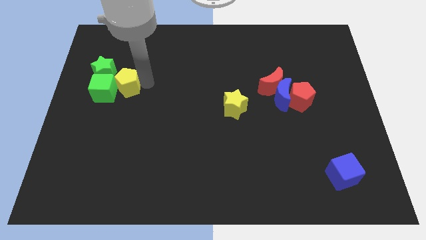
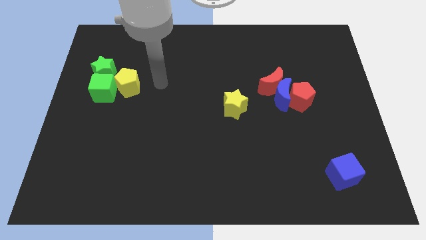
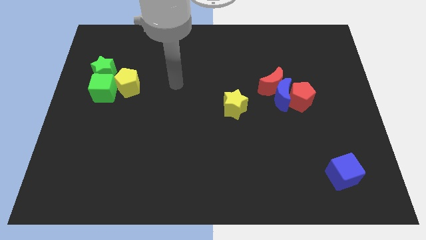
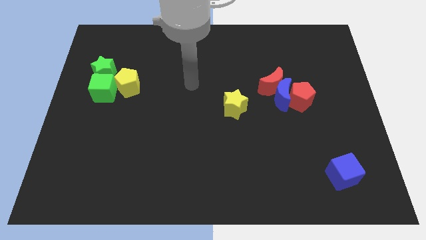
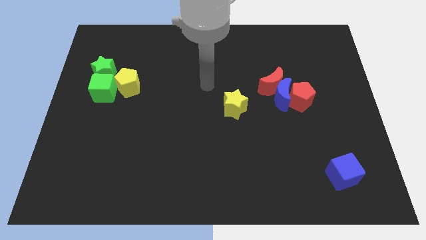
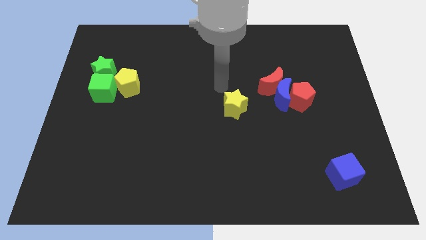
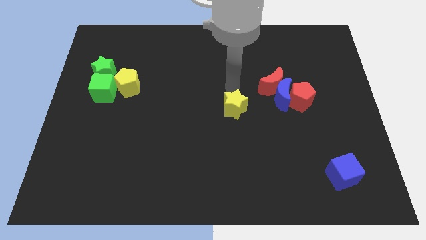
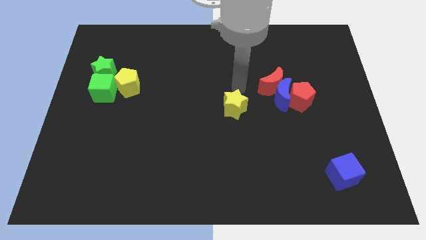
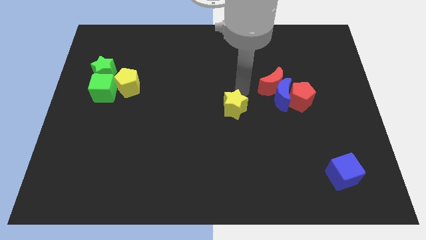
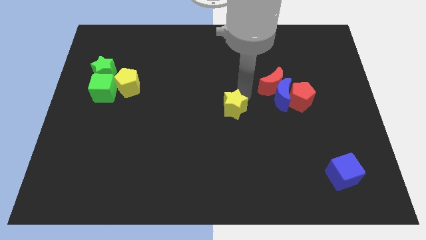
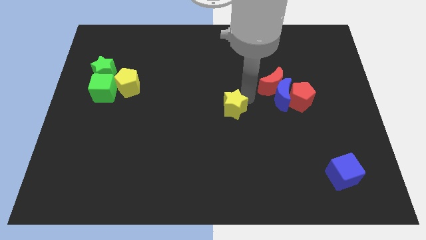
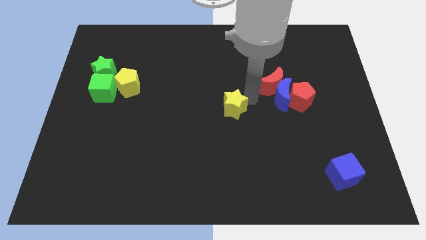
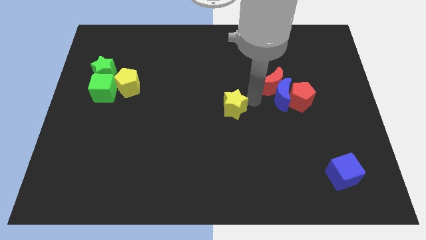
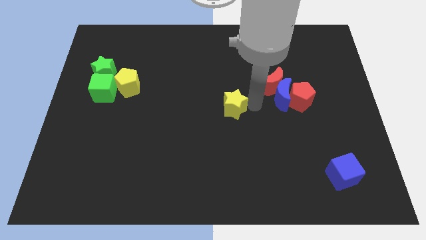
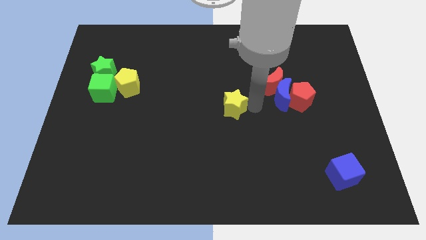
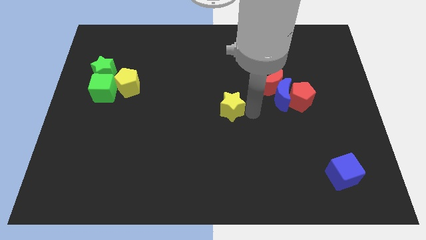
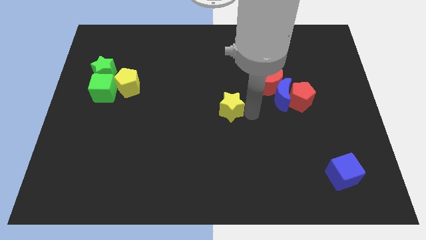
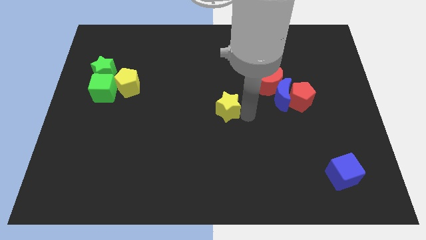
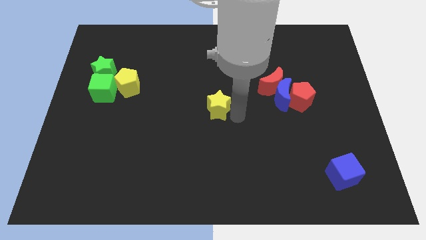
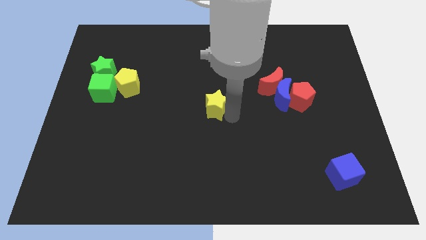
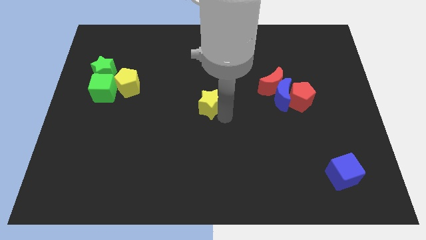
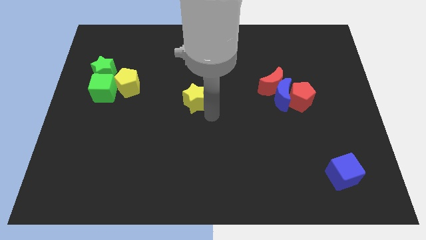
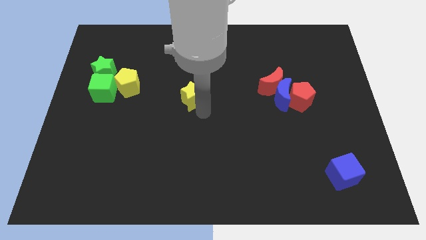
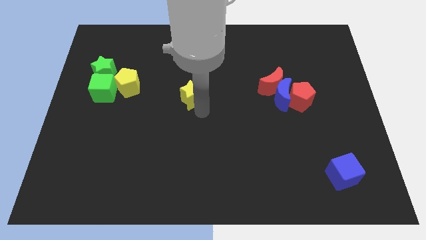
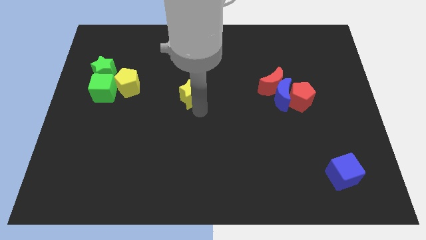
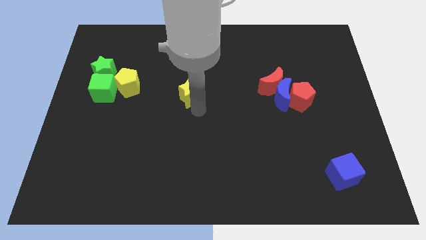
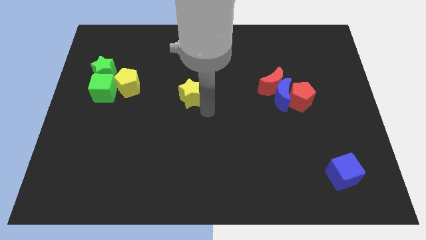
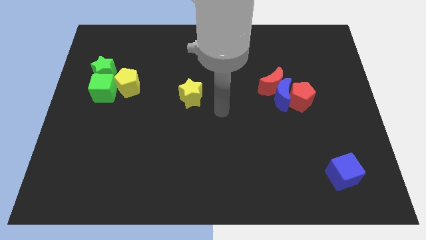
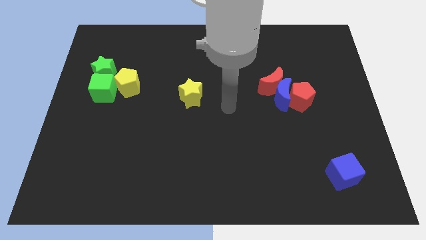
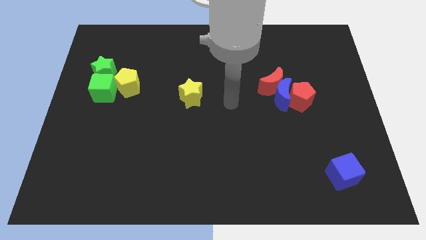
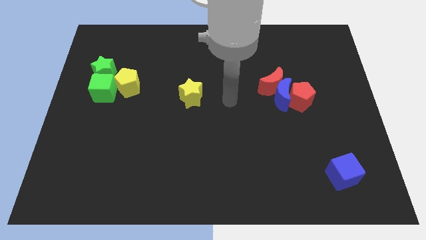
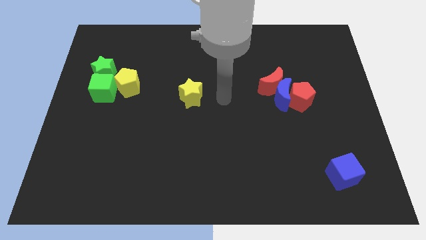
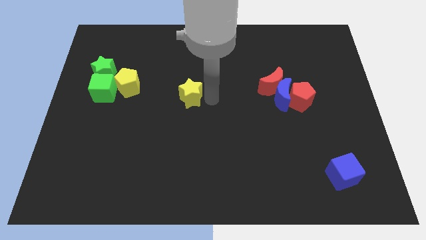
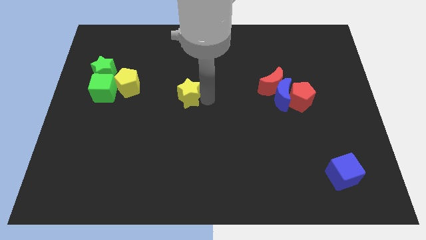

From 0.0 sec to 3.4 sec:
push the yellow star upward

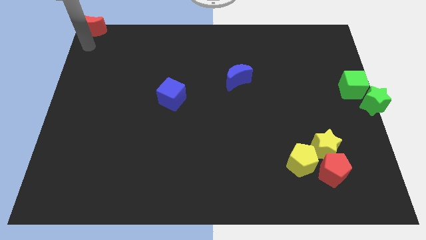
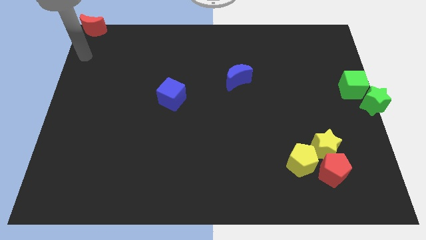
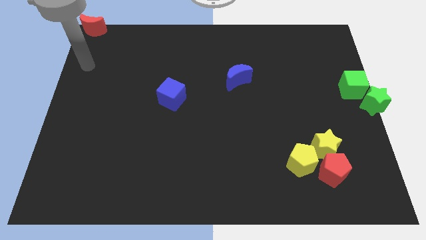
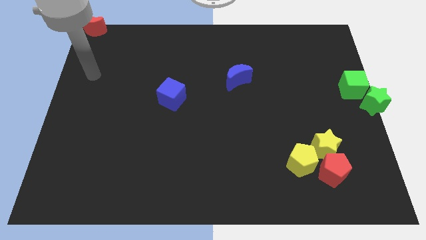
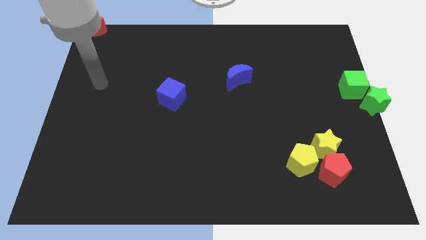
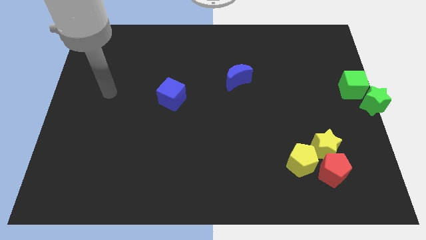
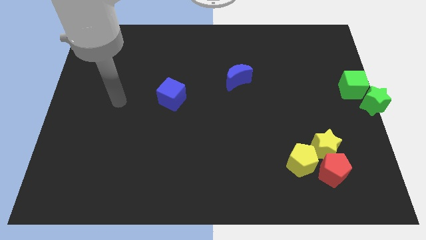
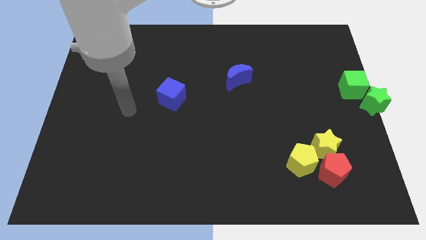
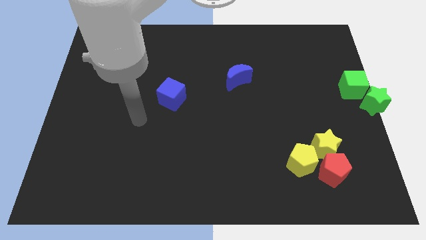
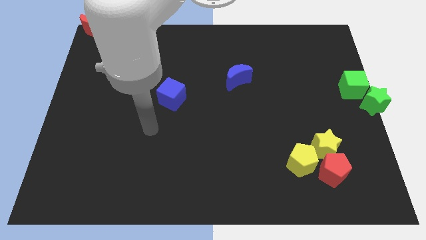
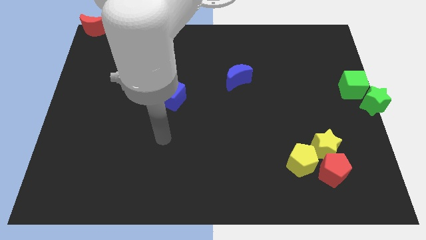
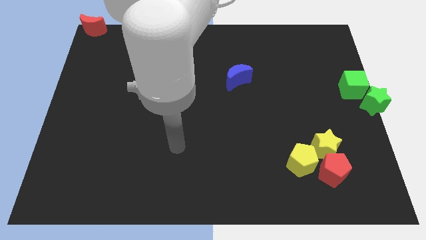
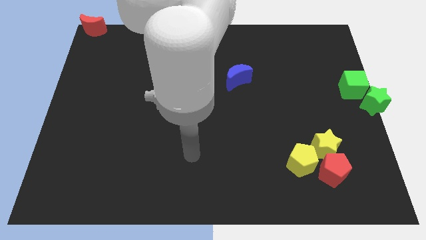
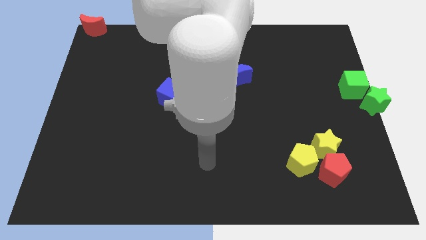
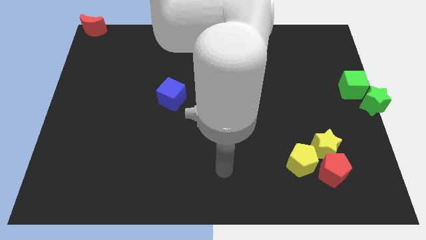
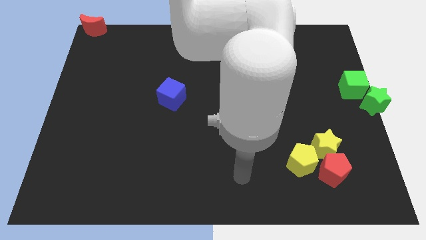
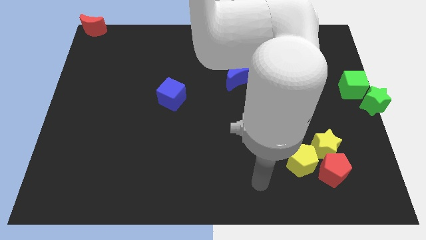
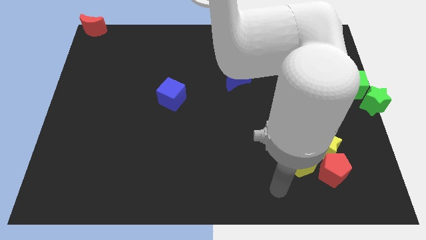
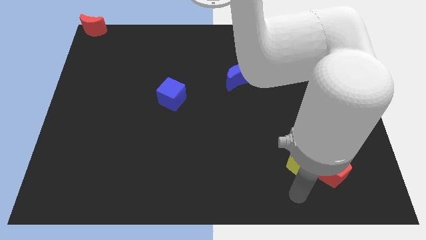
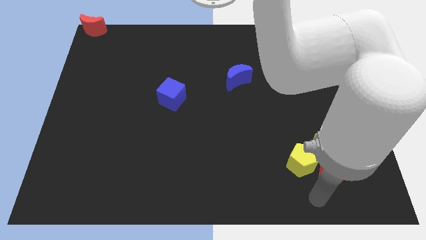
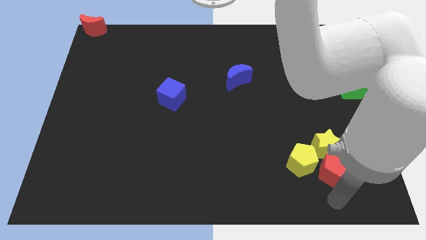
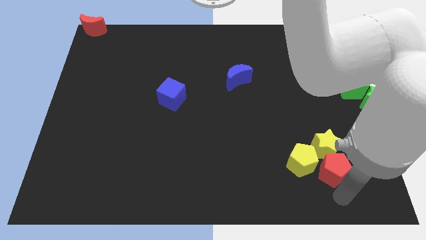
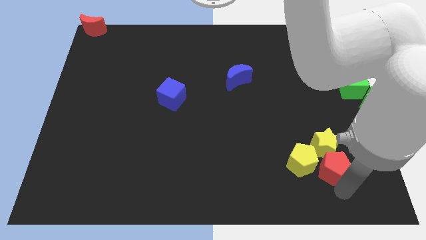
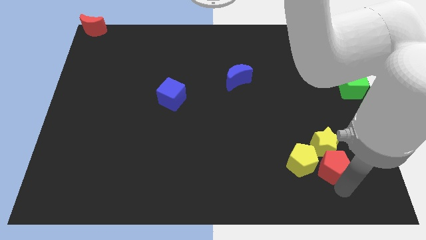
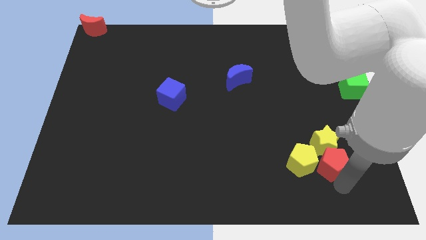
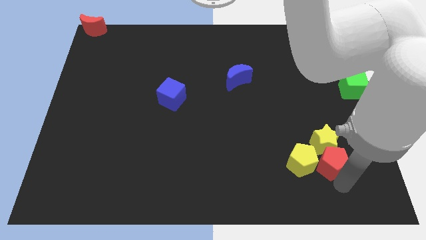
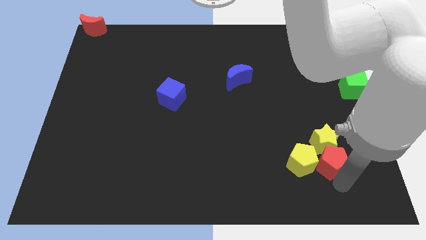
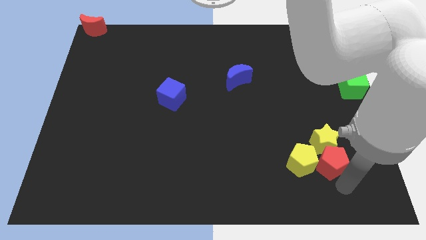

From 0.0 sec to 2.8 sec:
touch the bottom of red pentagon

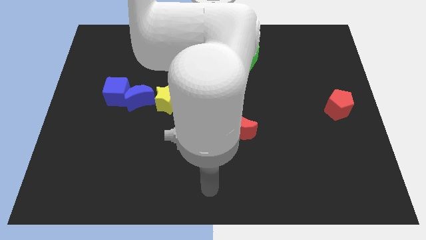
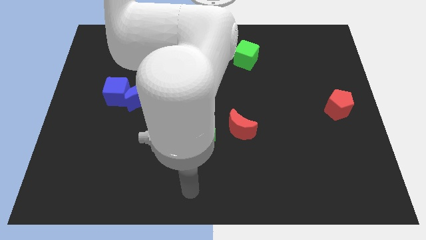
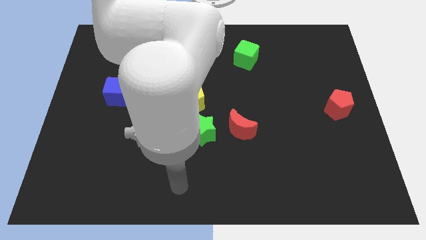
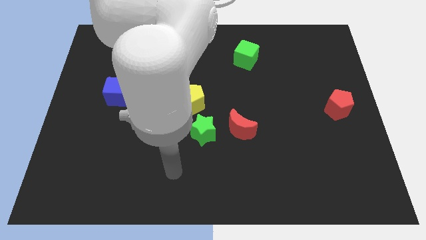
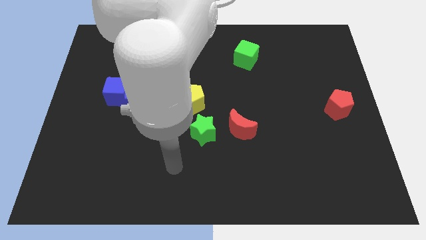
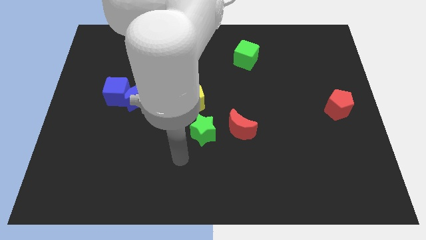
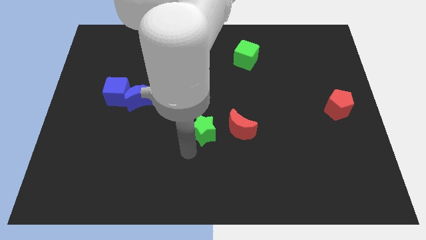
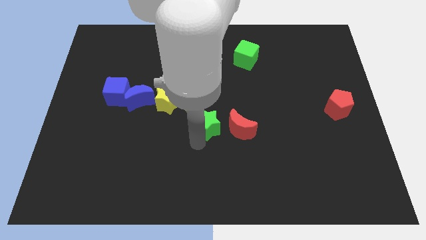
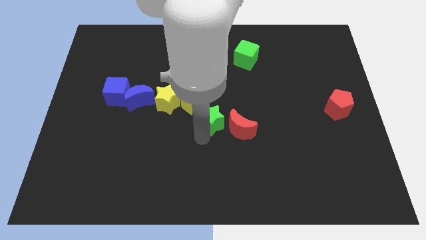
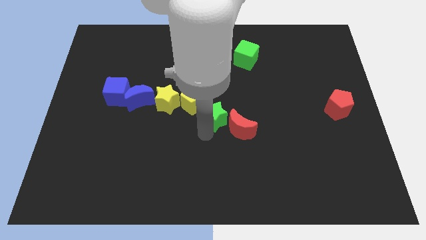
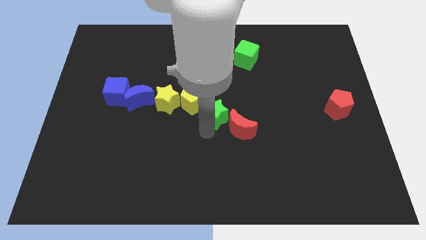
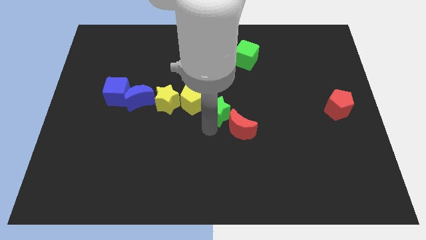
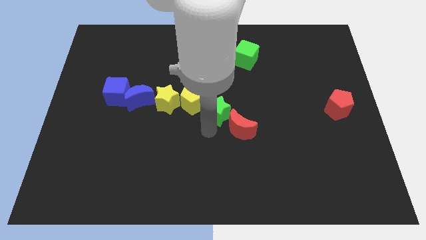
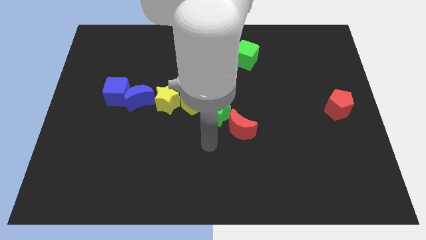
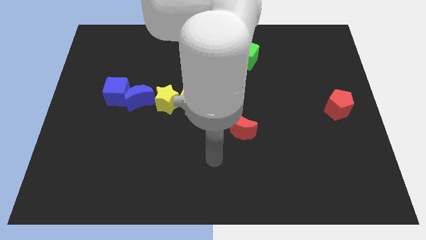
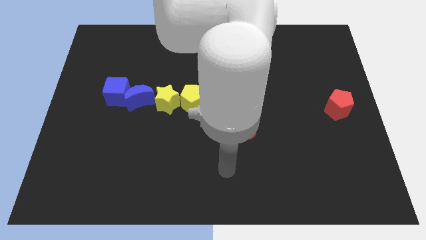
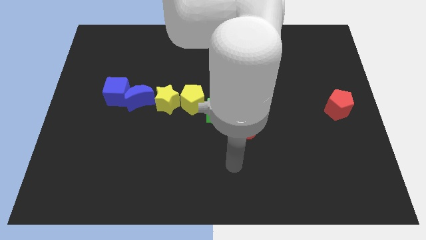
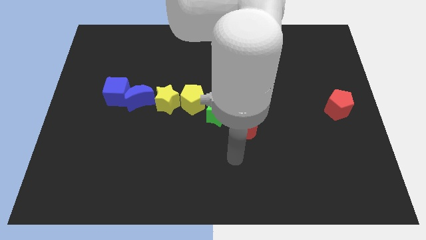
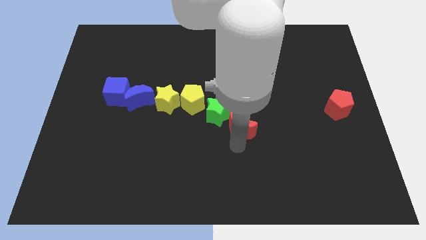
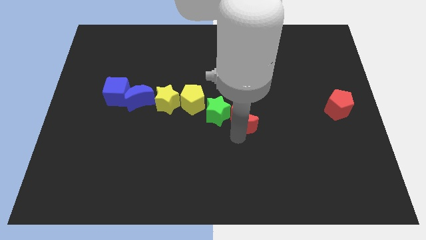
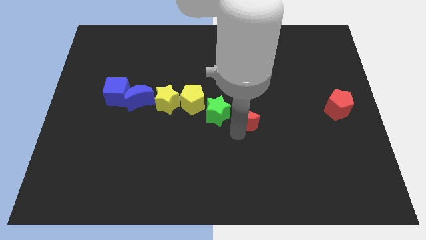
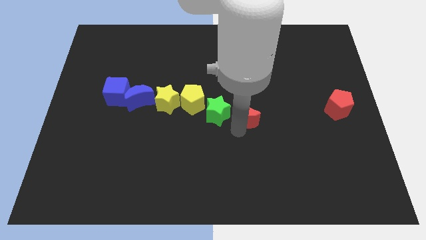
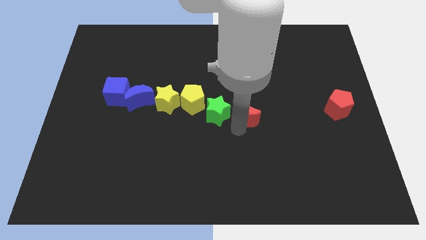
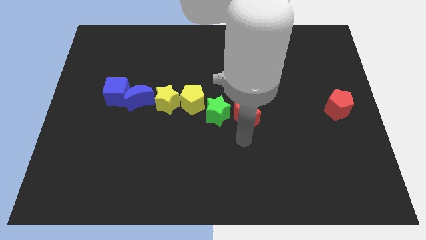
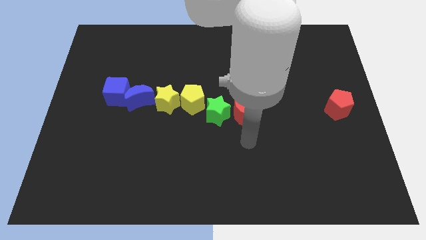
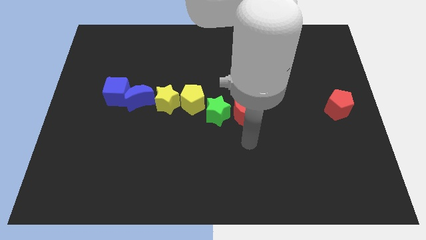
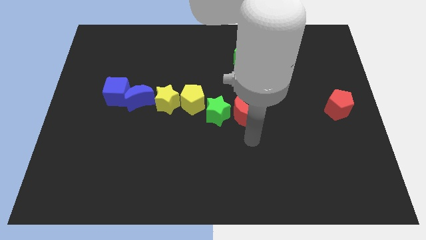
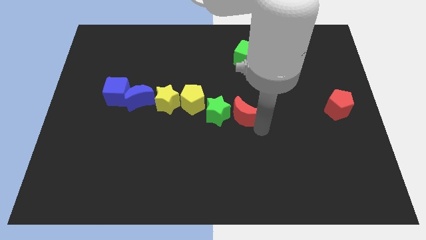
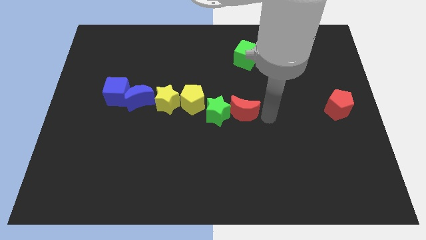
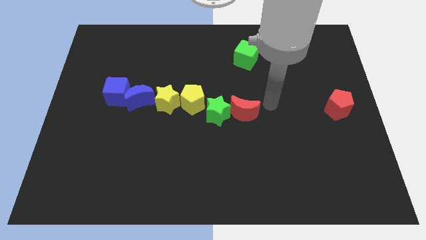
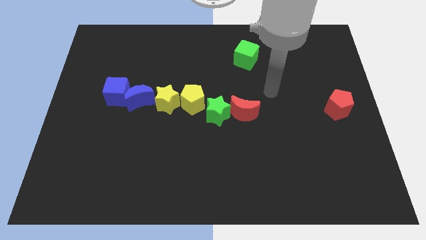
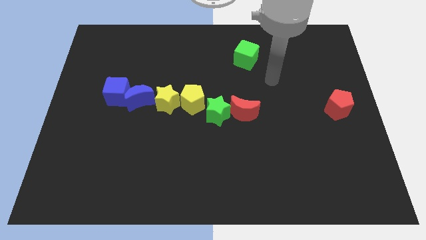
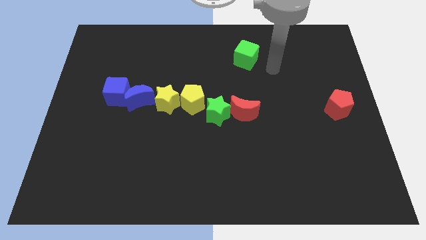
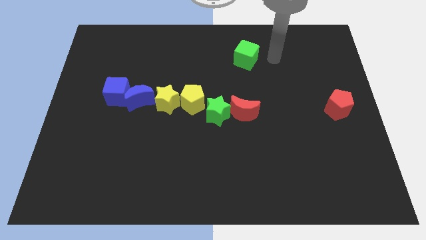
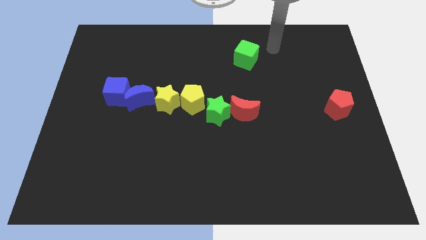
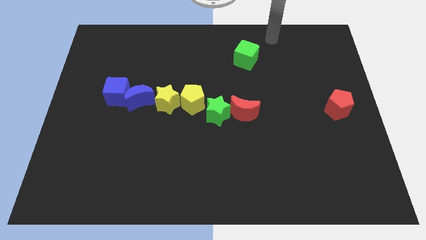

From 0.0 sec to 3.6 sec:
adjust the red moon parallel to the right side of the red pentagon
